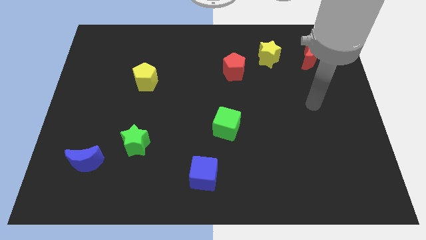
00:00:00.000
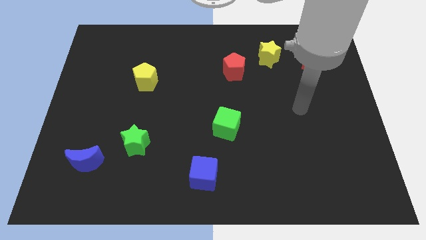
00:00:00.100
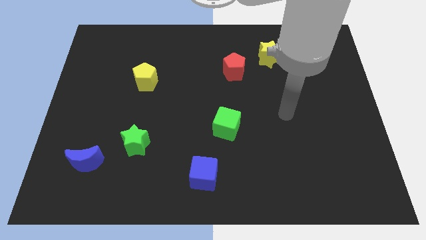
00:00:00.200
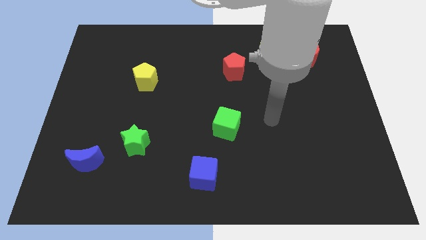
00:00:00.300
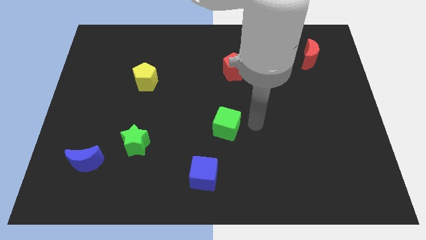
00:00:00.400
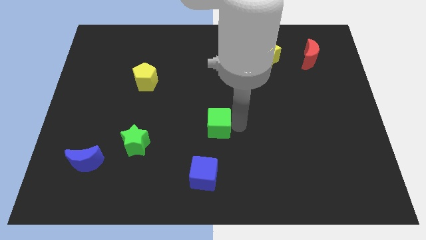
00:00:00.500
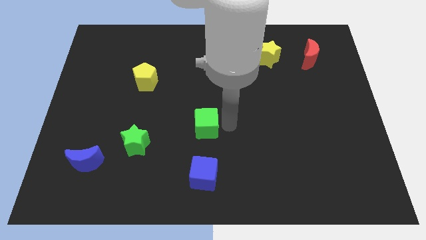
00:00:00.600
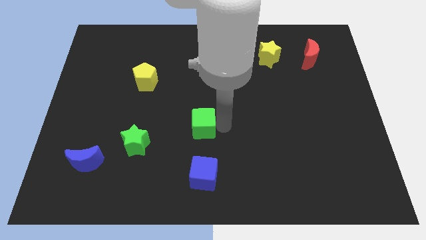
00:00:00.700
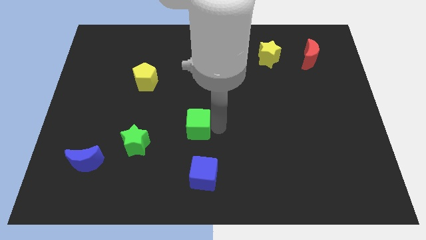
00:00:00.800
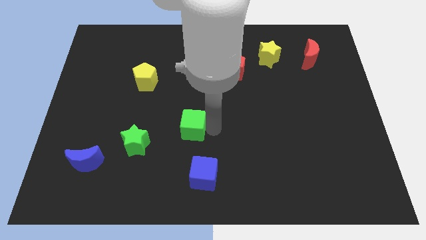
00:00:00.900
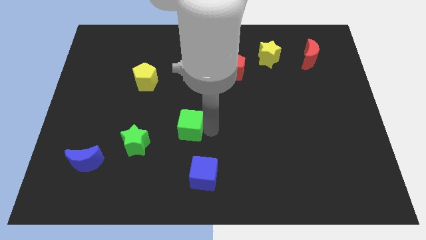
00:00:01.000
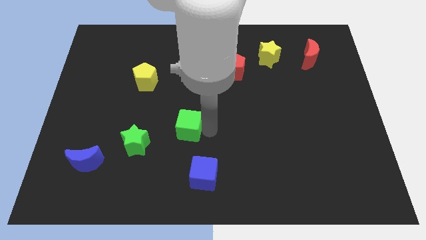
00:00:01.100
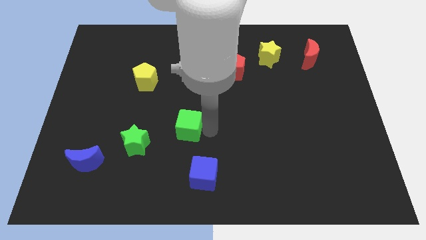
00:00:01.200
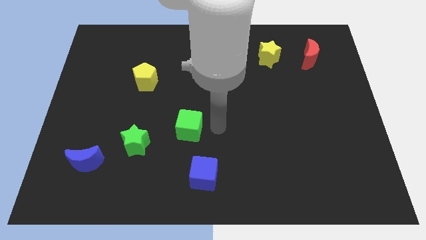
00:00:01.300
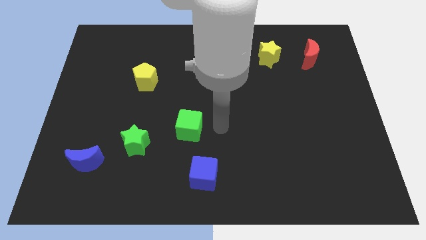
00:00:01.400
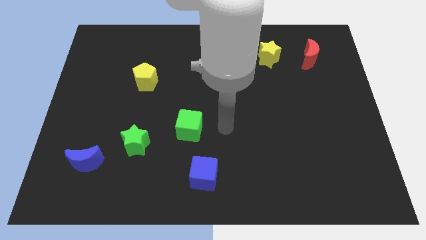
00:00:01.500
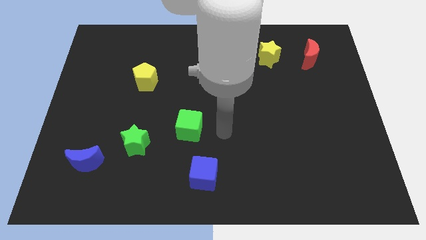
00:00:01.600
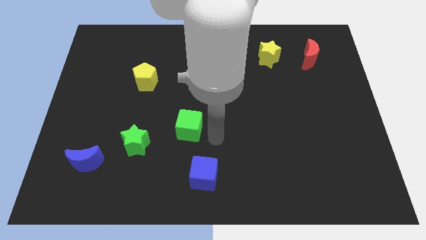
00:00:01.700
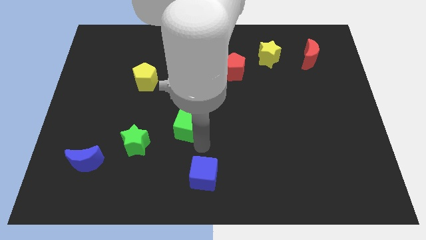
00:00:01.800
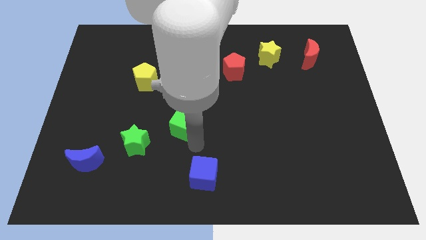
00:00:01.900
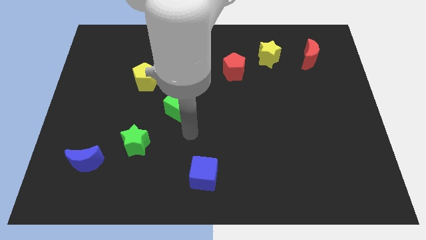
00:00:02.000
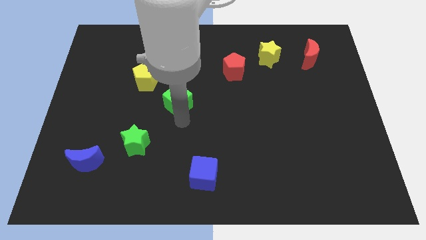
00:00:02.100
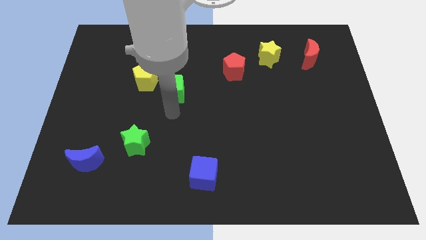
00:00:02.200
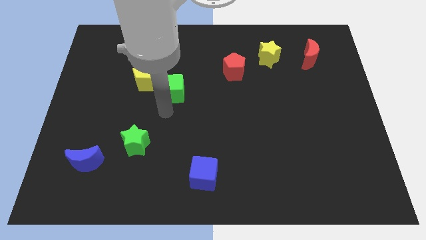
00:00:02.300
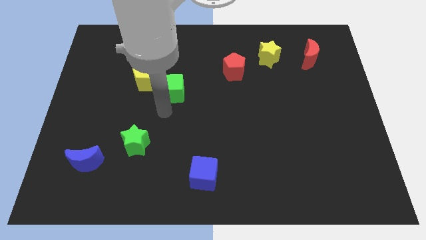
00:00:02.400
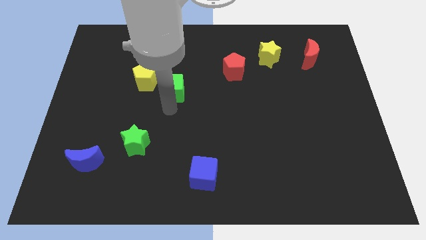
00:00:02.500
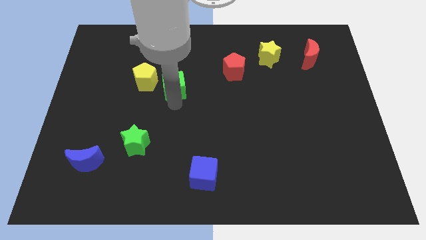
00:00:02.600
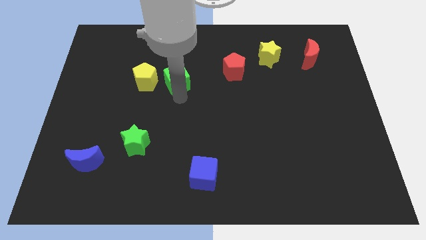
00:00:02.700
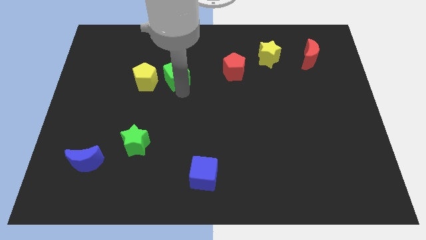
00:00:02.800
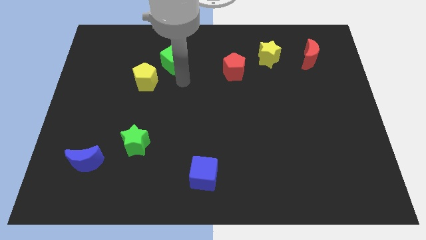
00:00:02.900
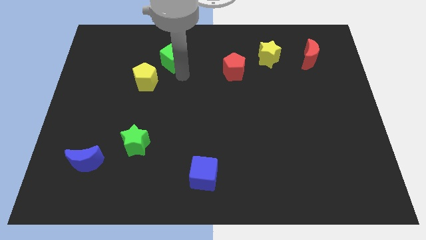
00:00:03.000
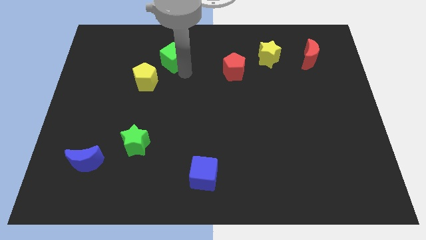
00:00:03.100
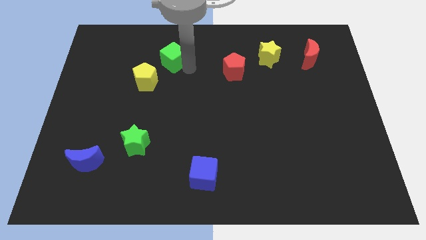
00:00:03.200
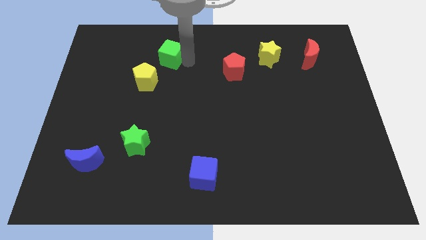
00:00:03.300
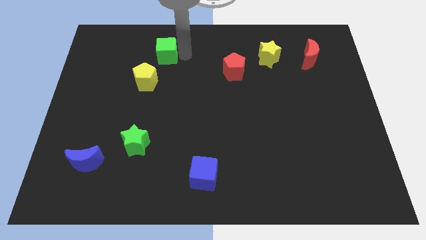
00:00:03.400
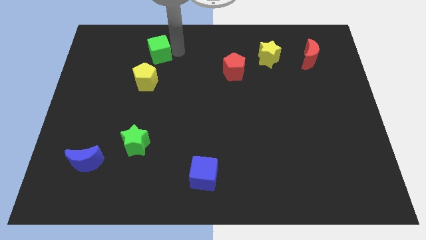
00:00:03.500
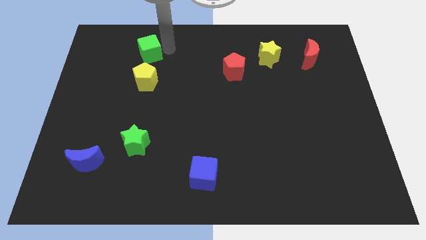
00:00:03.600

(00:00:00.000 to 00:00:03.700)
place the green cube at the top side of the yellow pentagon

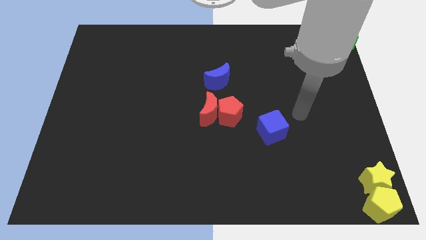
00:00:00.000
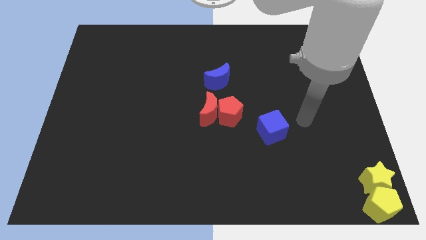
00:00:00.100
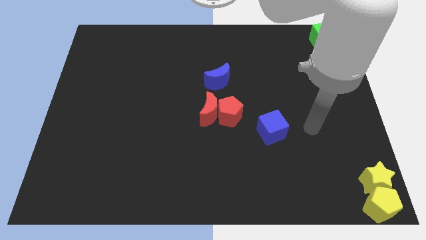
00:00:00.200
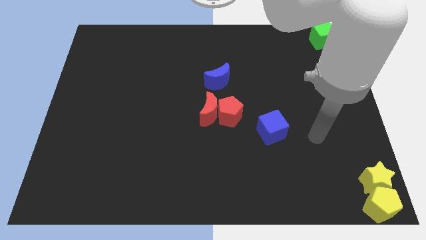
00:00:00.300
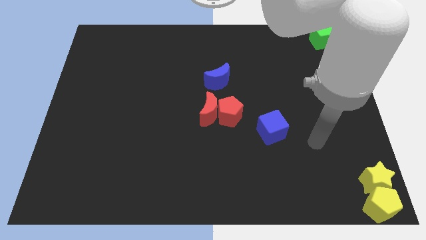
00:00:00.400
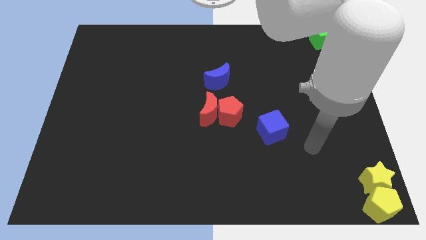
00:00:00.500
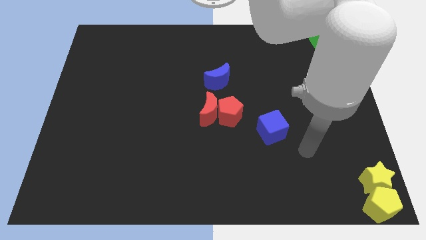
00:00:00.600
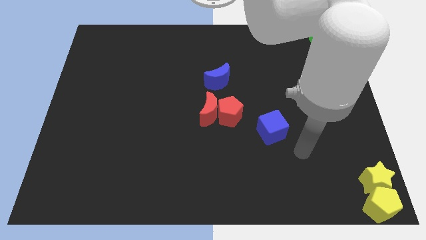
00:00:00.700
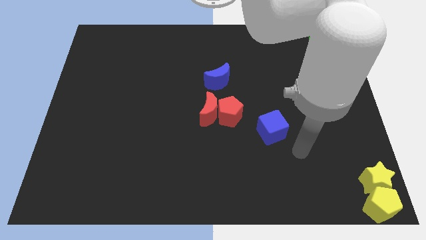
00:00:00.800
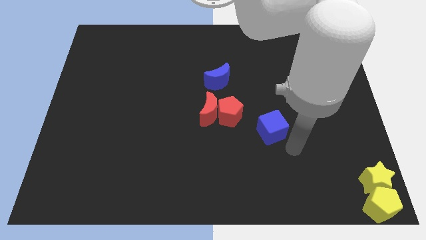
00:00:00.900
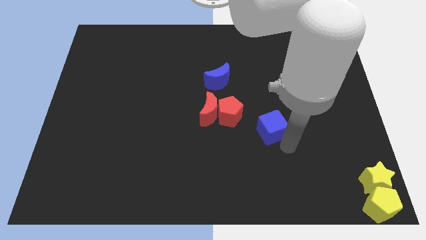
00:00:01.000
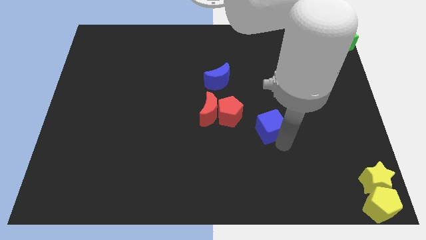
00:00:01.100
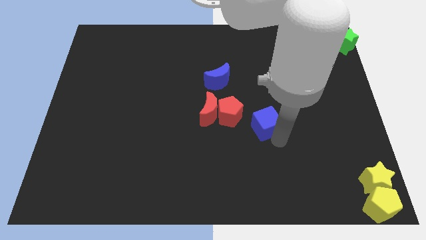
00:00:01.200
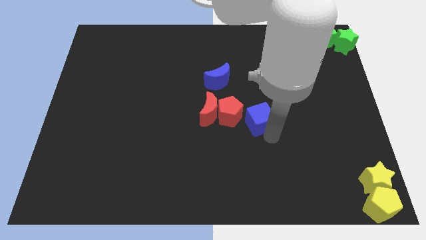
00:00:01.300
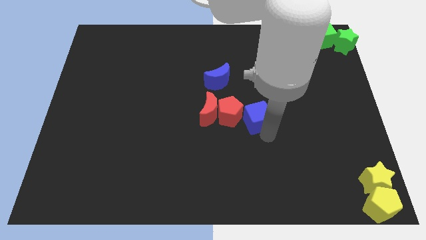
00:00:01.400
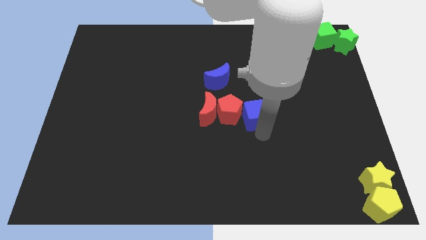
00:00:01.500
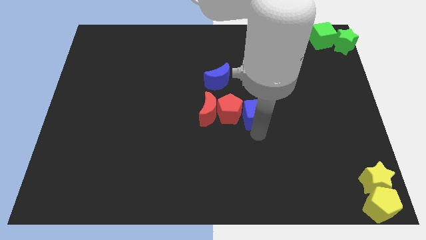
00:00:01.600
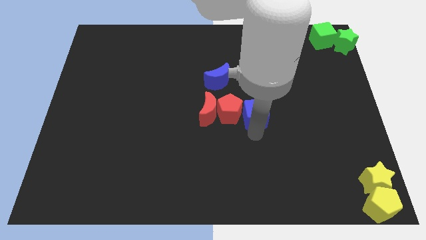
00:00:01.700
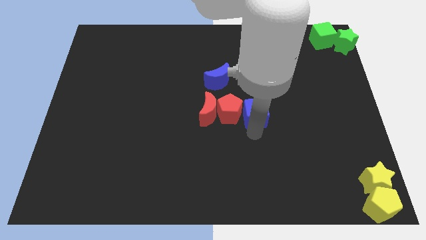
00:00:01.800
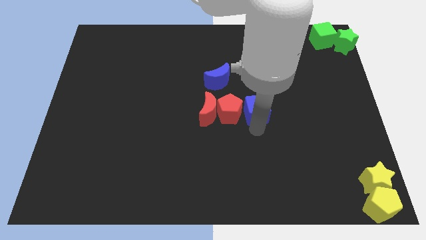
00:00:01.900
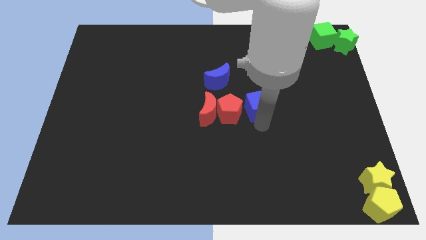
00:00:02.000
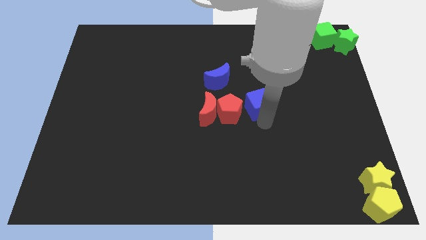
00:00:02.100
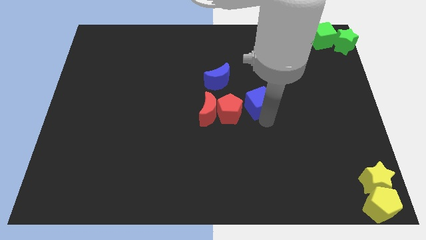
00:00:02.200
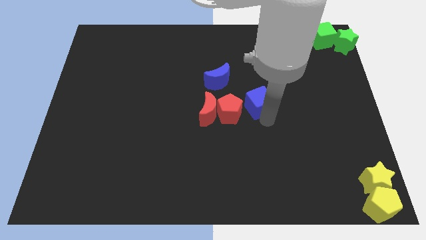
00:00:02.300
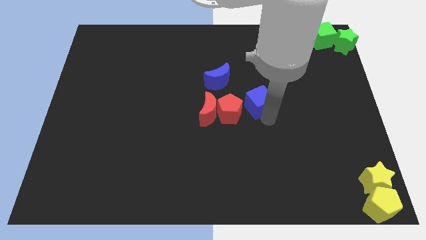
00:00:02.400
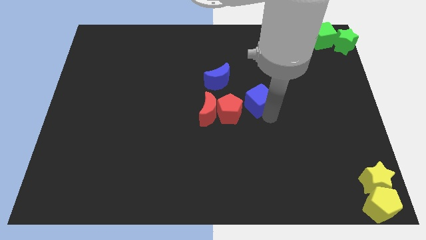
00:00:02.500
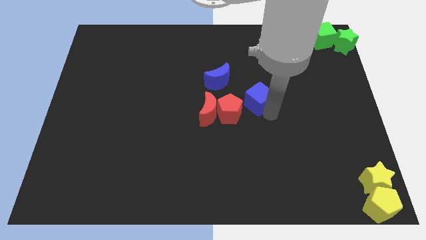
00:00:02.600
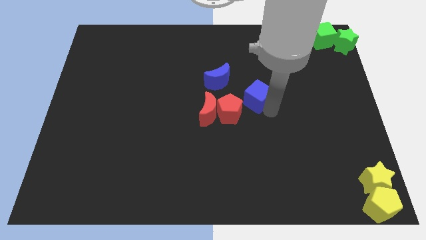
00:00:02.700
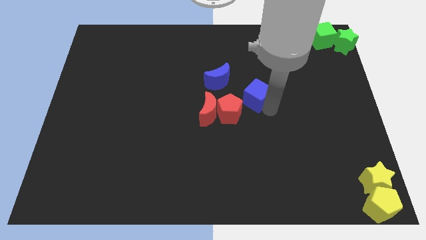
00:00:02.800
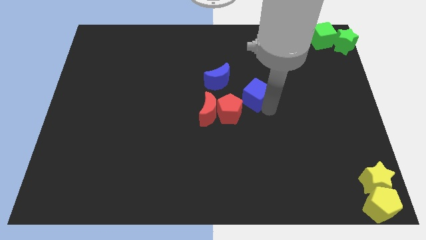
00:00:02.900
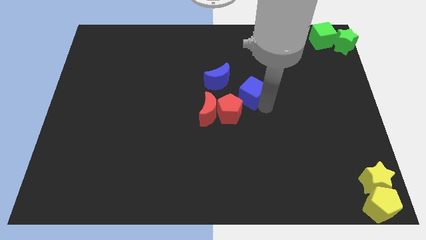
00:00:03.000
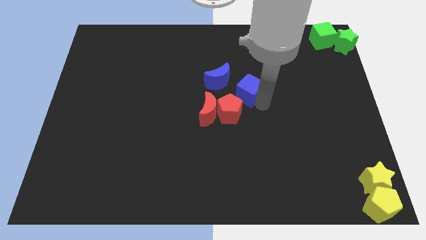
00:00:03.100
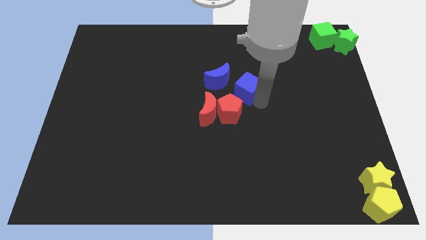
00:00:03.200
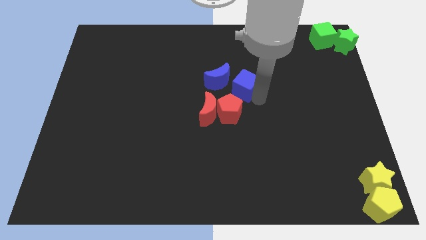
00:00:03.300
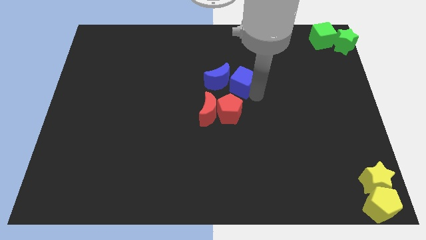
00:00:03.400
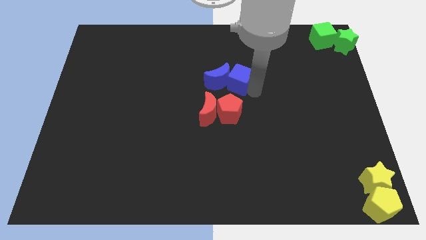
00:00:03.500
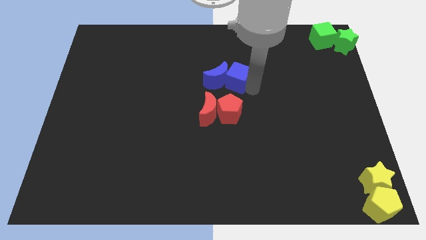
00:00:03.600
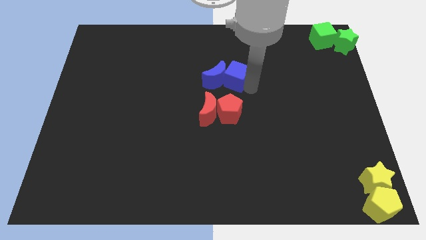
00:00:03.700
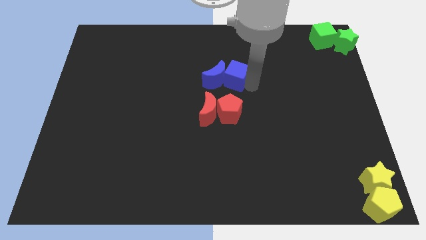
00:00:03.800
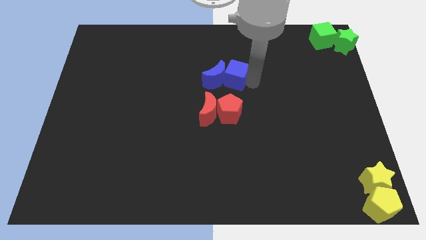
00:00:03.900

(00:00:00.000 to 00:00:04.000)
place the blue cube right to the blue crescent

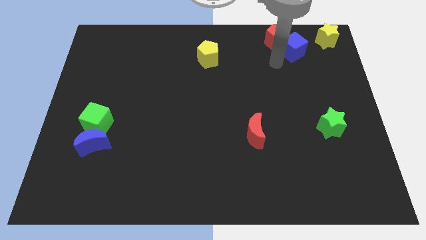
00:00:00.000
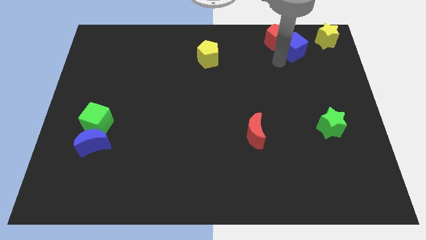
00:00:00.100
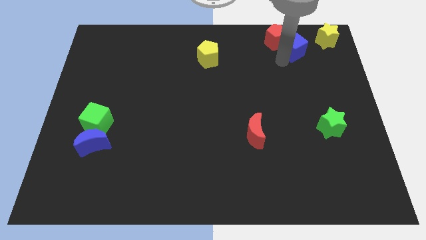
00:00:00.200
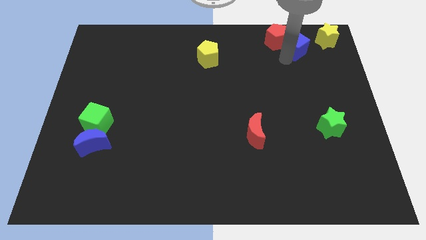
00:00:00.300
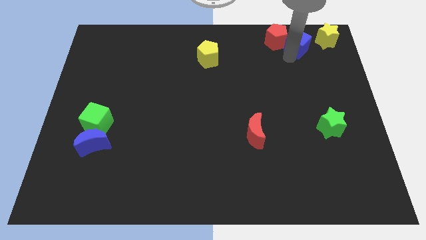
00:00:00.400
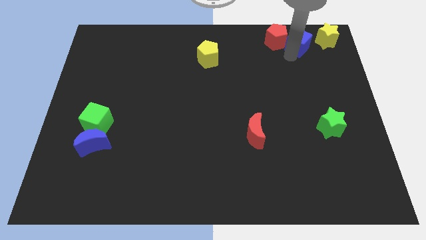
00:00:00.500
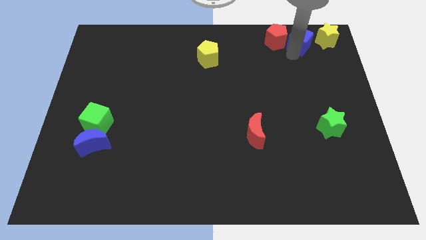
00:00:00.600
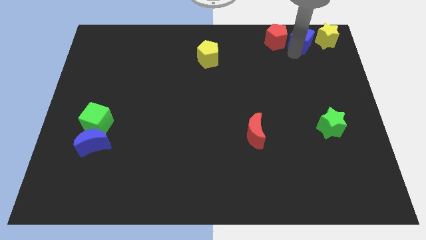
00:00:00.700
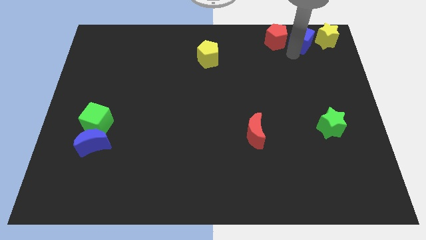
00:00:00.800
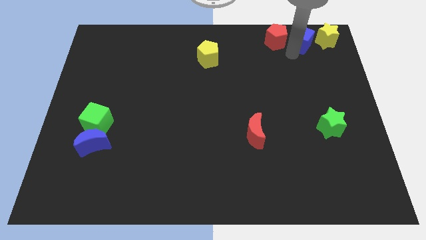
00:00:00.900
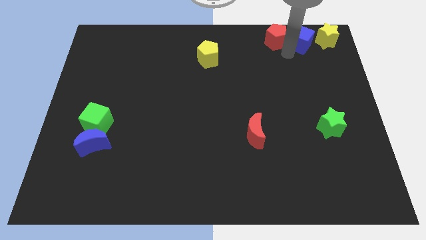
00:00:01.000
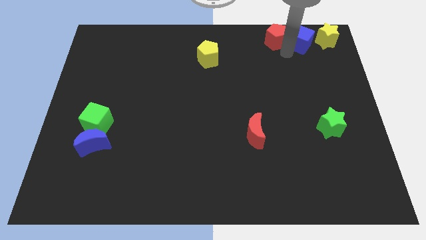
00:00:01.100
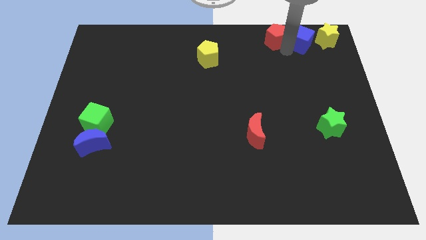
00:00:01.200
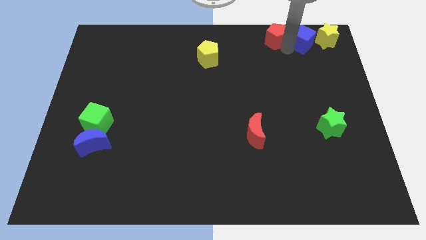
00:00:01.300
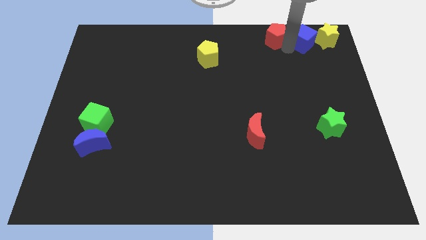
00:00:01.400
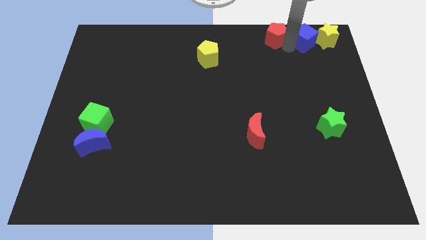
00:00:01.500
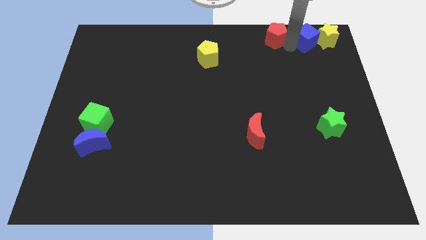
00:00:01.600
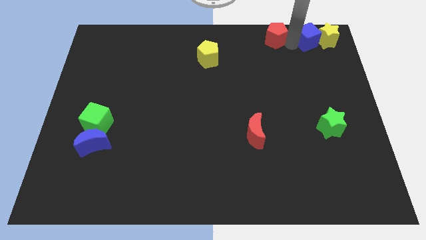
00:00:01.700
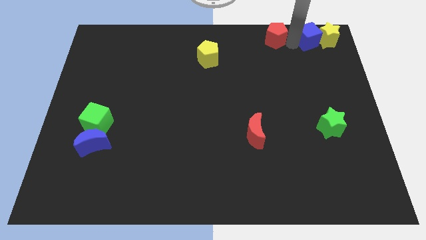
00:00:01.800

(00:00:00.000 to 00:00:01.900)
place the blue cube in between the red pentagon and the yellow star
